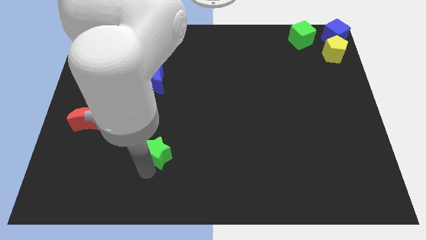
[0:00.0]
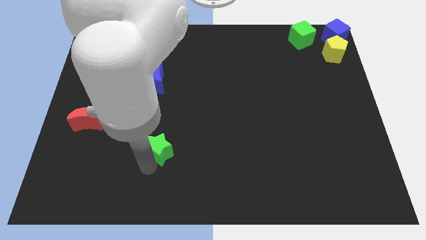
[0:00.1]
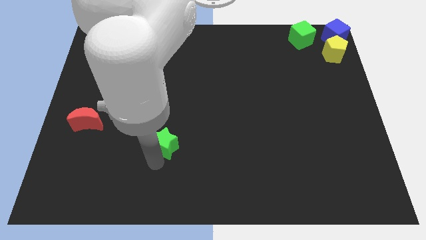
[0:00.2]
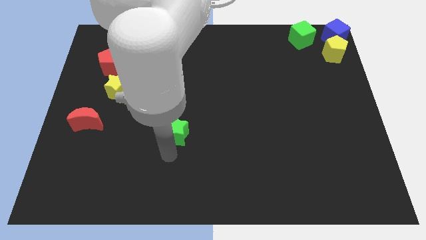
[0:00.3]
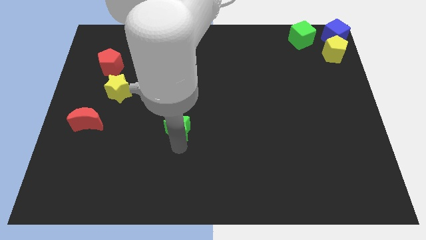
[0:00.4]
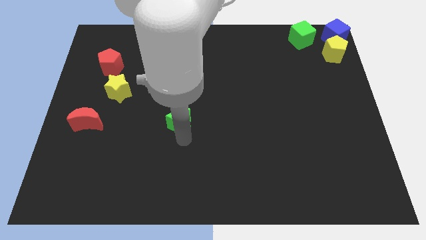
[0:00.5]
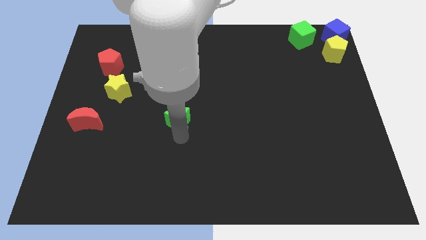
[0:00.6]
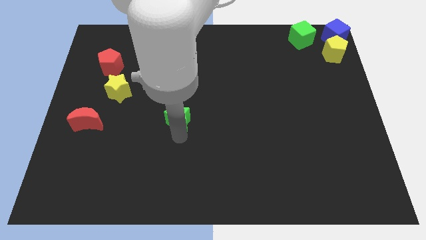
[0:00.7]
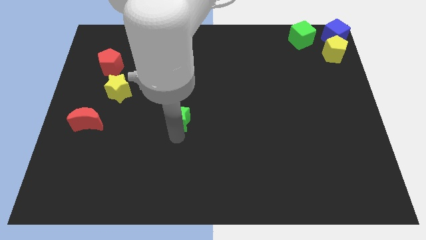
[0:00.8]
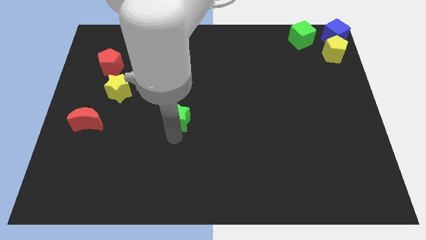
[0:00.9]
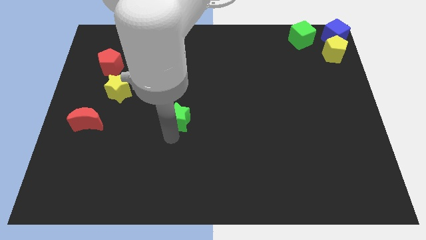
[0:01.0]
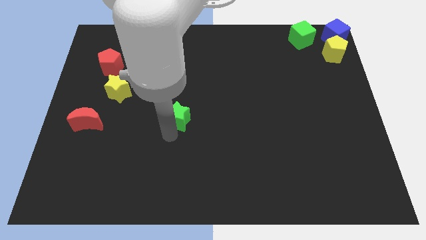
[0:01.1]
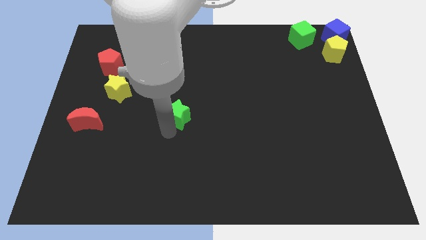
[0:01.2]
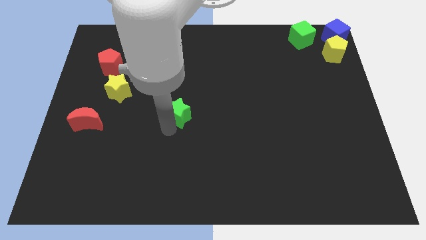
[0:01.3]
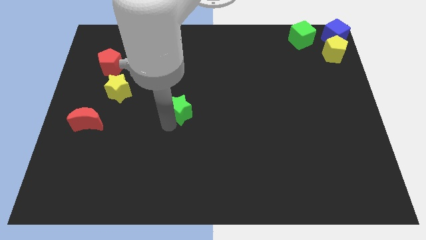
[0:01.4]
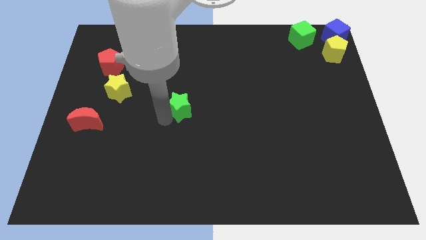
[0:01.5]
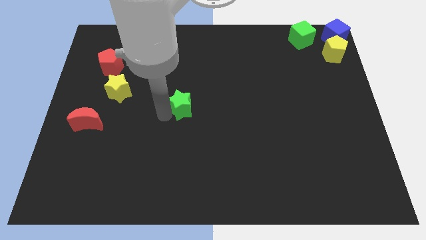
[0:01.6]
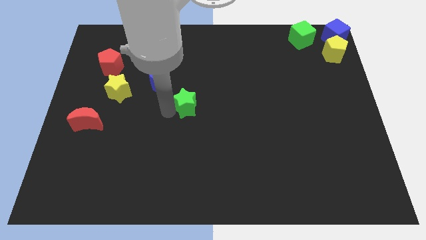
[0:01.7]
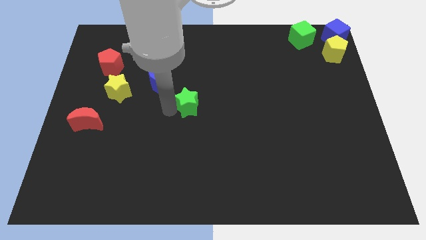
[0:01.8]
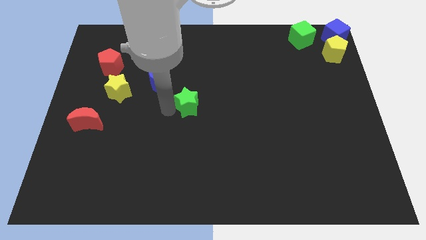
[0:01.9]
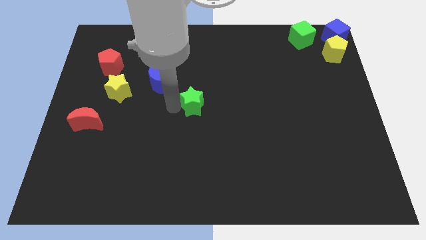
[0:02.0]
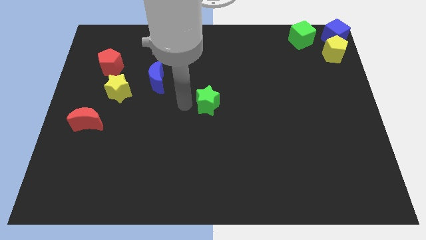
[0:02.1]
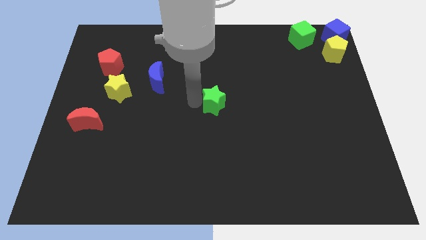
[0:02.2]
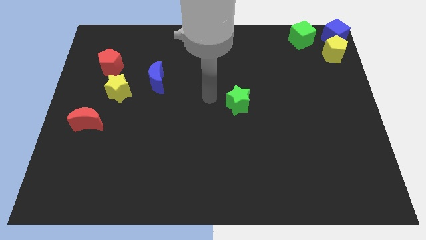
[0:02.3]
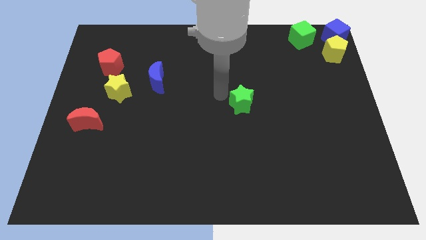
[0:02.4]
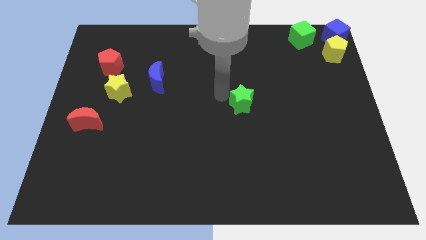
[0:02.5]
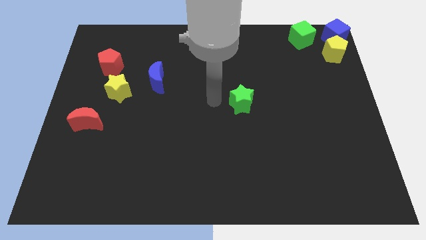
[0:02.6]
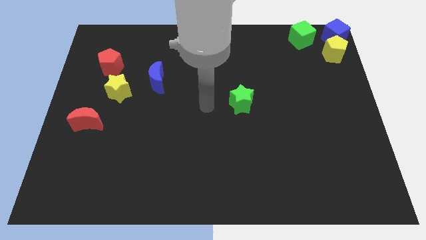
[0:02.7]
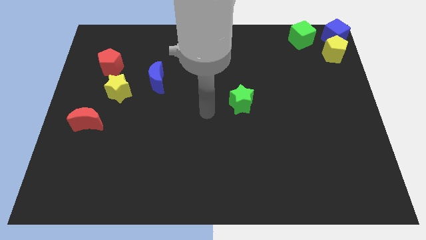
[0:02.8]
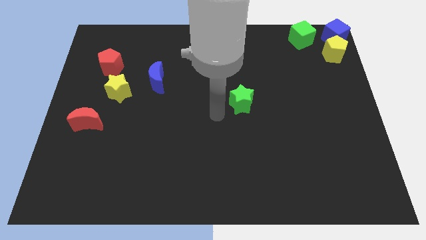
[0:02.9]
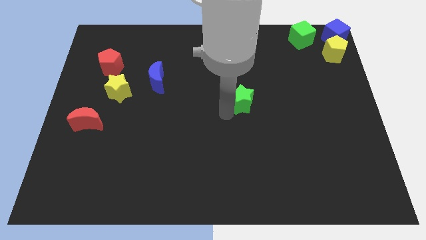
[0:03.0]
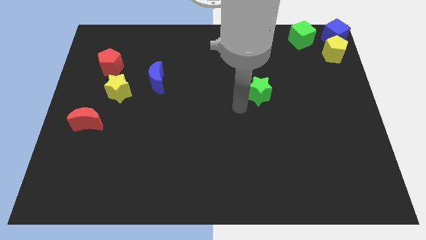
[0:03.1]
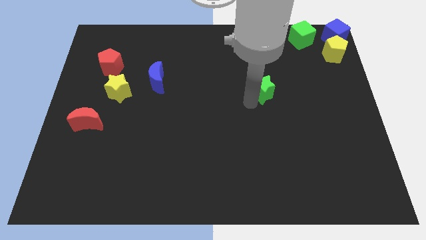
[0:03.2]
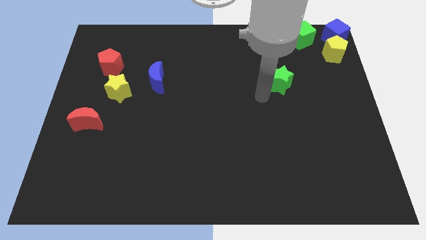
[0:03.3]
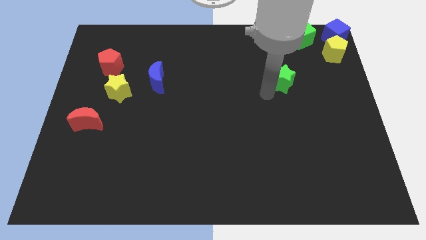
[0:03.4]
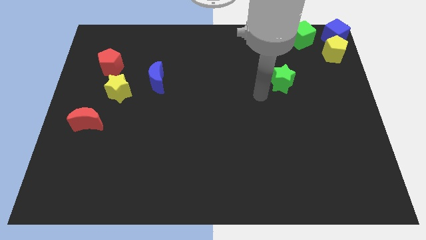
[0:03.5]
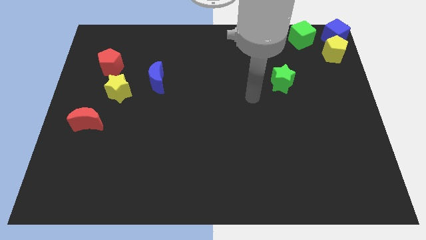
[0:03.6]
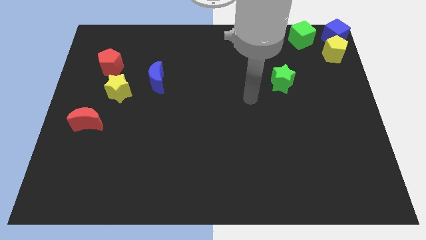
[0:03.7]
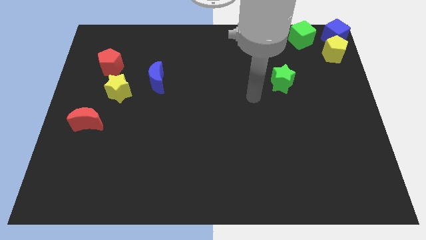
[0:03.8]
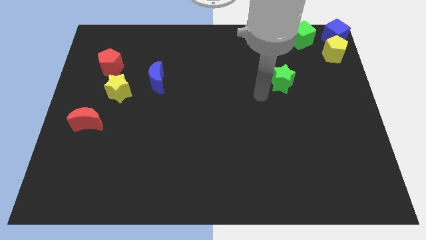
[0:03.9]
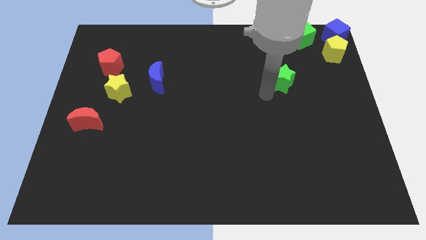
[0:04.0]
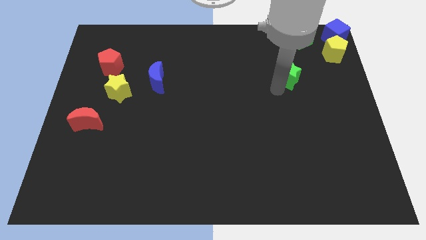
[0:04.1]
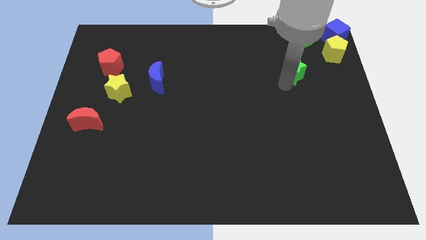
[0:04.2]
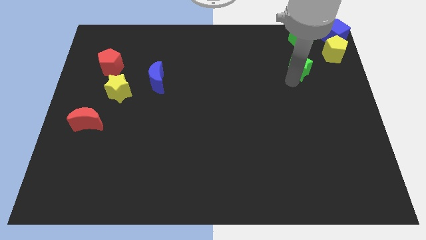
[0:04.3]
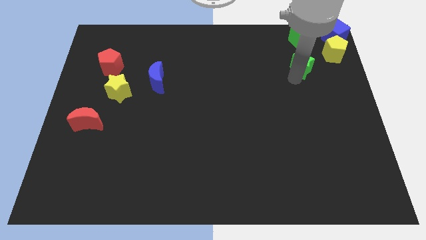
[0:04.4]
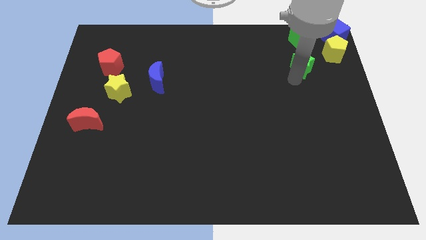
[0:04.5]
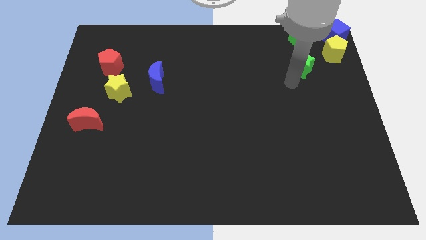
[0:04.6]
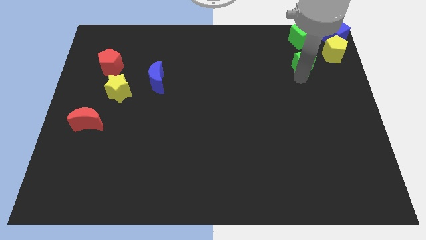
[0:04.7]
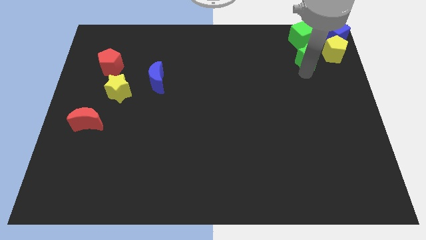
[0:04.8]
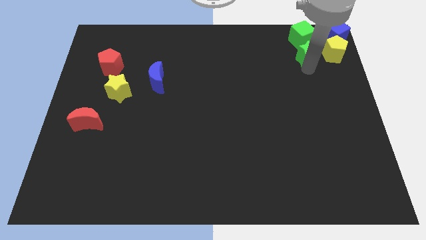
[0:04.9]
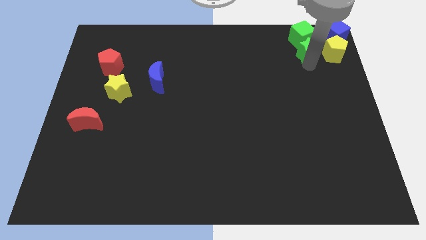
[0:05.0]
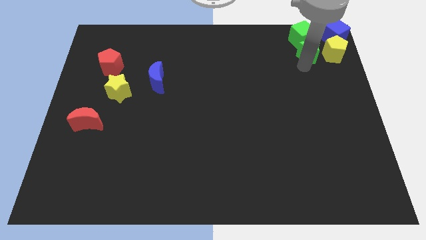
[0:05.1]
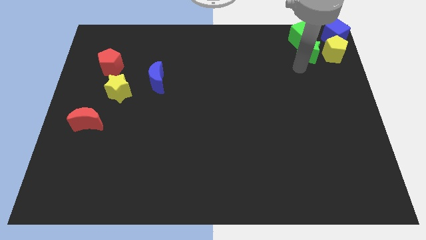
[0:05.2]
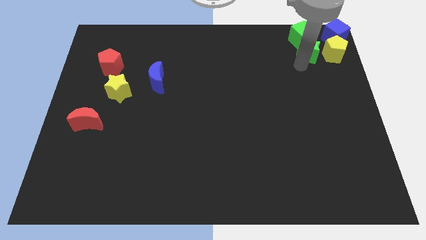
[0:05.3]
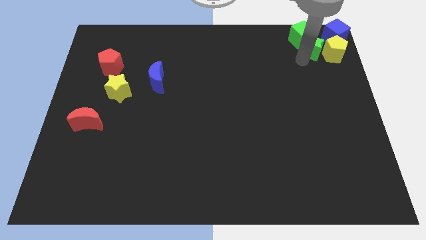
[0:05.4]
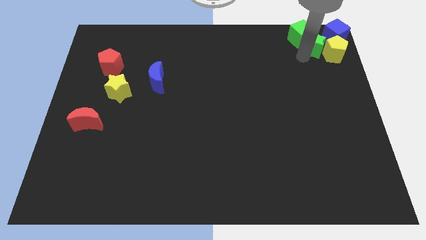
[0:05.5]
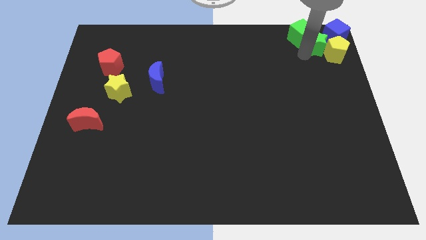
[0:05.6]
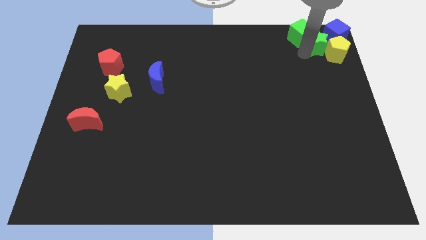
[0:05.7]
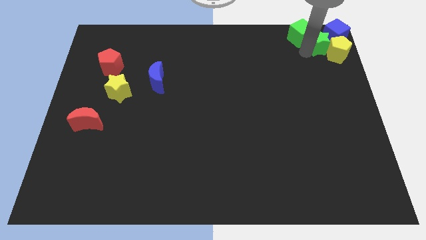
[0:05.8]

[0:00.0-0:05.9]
push the green star into the green cube and yellow pentagon

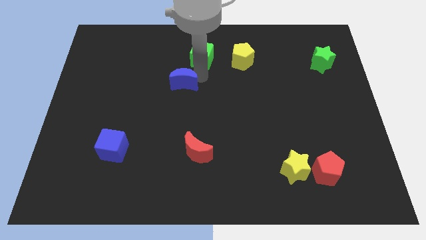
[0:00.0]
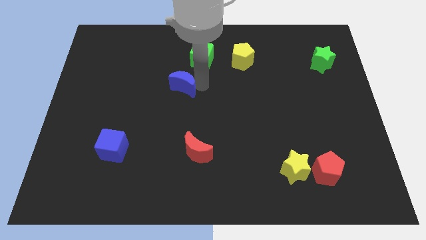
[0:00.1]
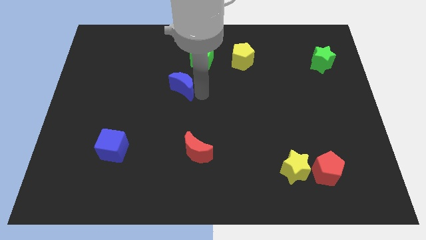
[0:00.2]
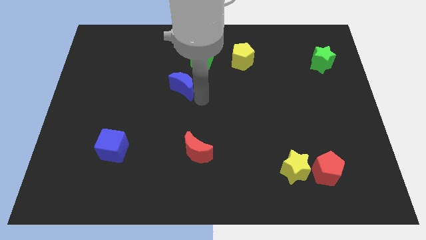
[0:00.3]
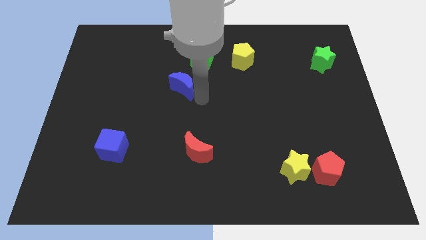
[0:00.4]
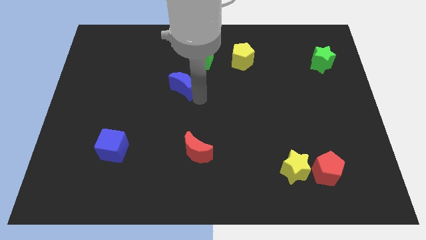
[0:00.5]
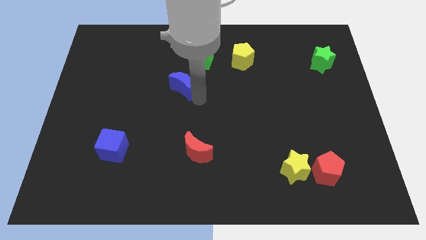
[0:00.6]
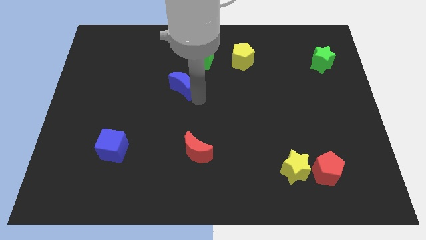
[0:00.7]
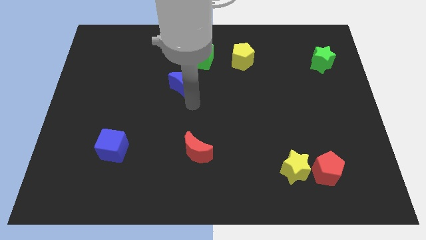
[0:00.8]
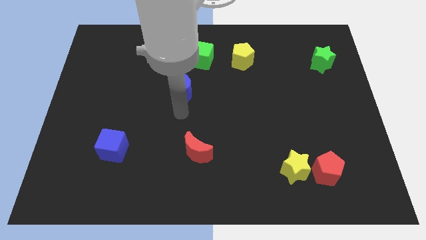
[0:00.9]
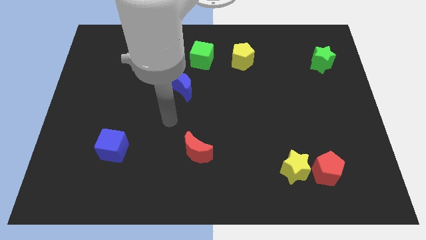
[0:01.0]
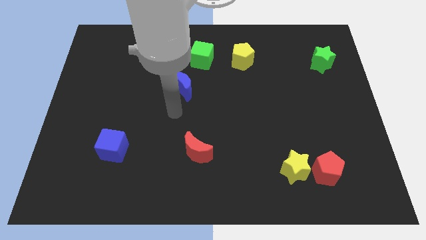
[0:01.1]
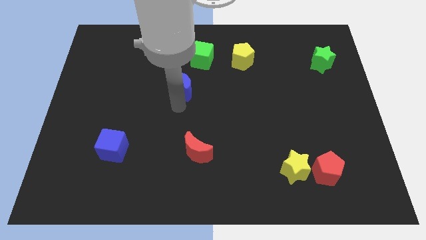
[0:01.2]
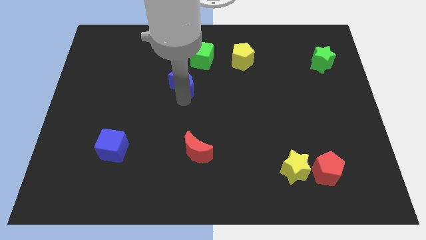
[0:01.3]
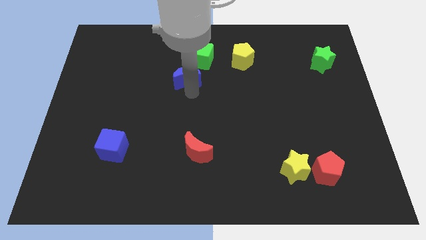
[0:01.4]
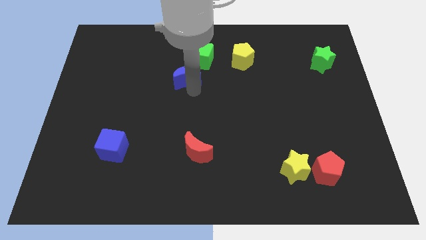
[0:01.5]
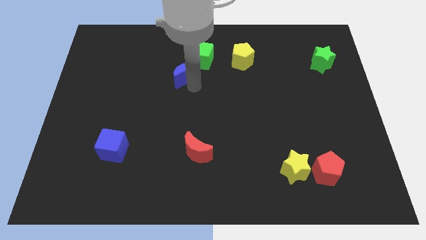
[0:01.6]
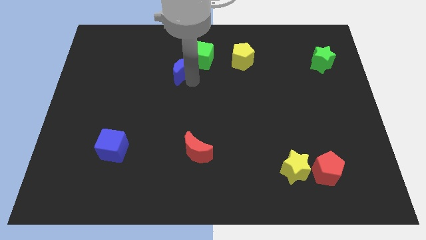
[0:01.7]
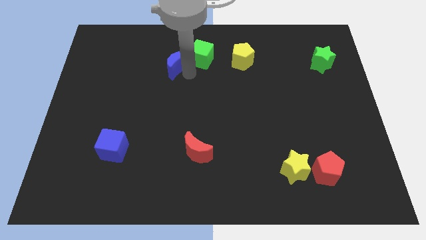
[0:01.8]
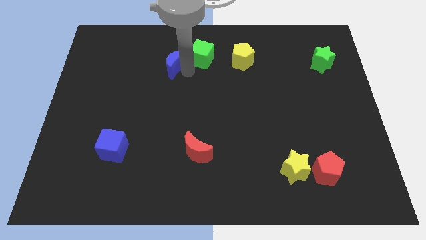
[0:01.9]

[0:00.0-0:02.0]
push the blue crescent into green cube

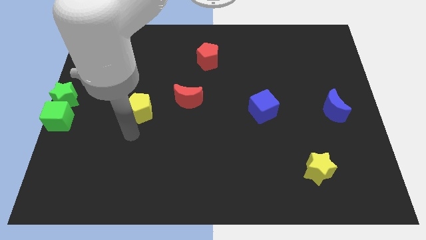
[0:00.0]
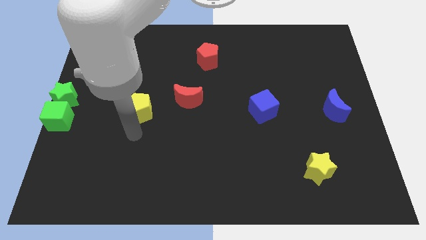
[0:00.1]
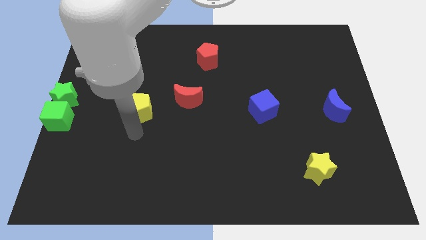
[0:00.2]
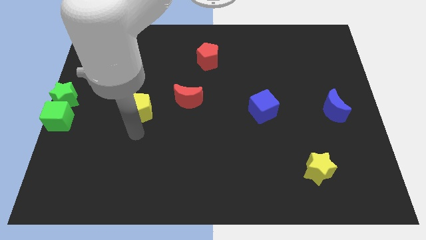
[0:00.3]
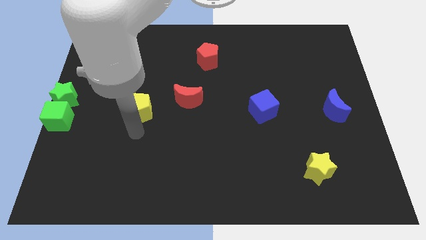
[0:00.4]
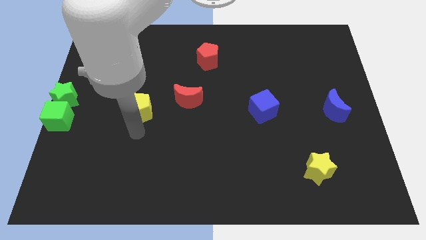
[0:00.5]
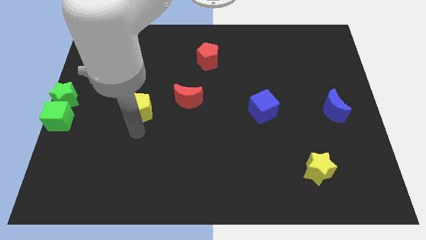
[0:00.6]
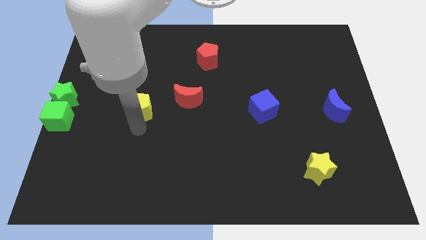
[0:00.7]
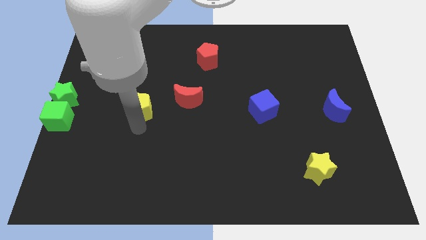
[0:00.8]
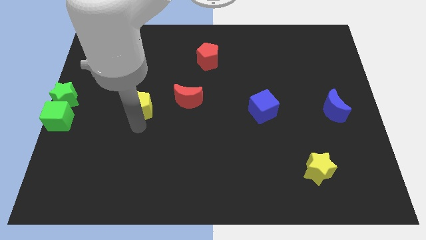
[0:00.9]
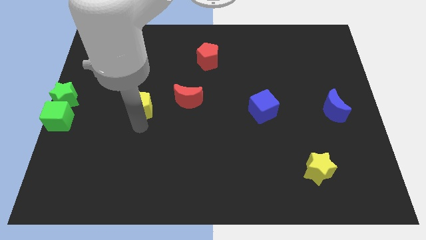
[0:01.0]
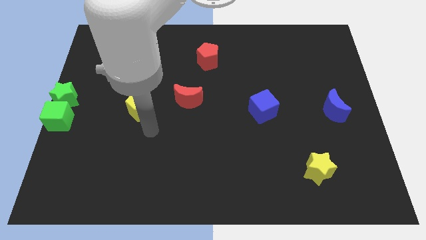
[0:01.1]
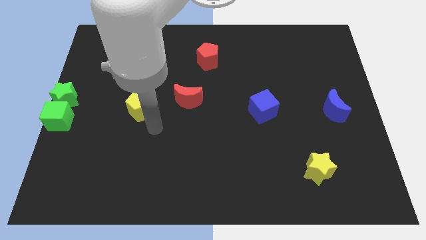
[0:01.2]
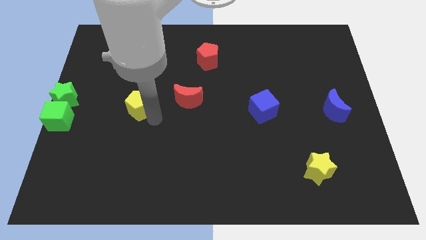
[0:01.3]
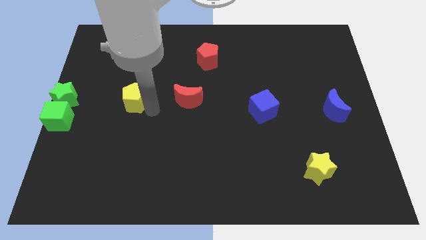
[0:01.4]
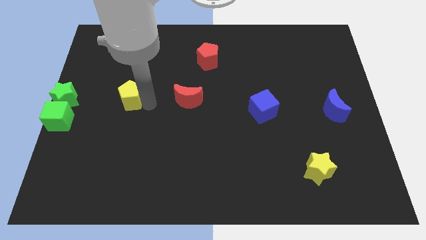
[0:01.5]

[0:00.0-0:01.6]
push the yellow pentagon
